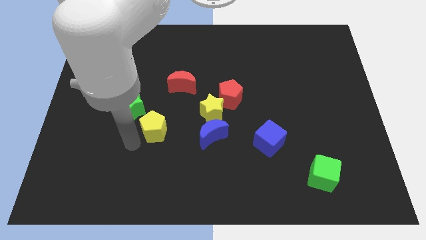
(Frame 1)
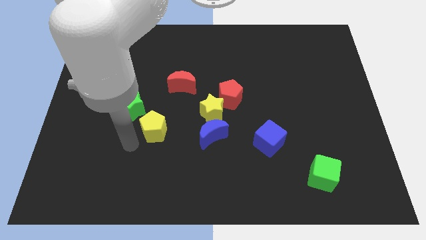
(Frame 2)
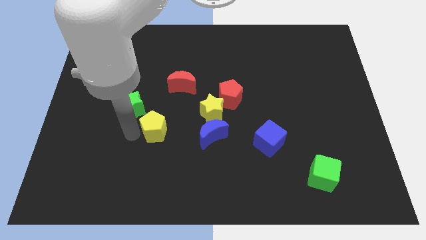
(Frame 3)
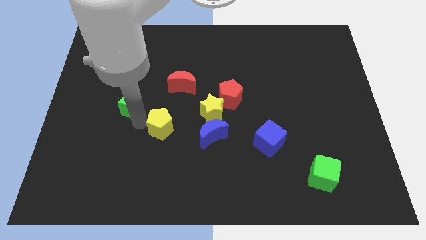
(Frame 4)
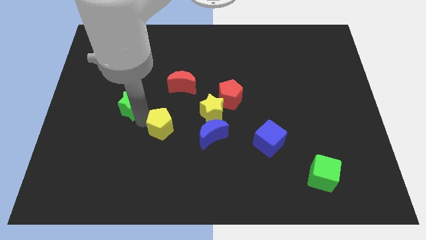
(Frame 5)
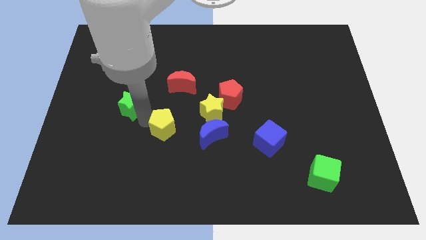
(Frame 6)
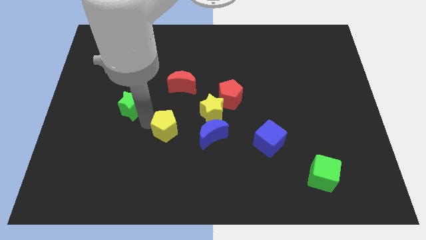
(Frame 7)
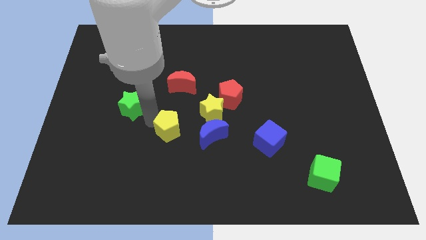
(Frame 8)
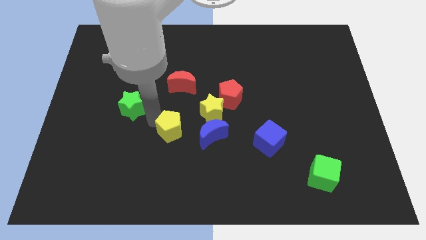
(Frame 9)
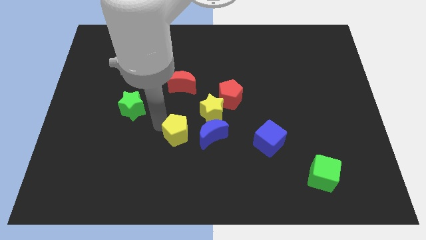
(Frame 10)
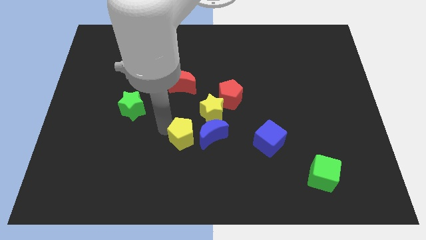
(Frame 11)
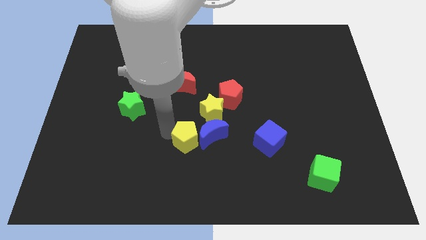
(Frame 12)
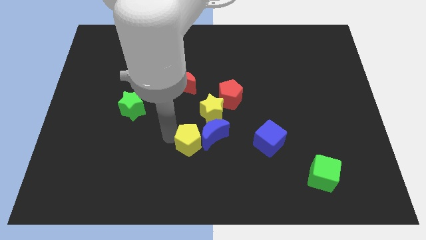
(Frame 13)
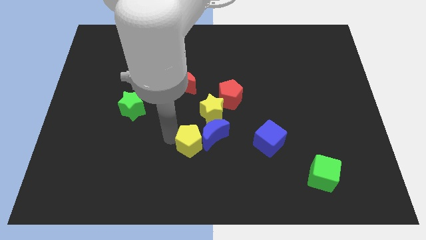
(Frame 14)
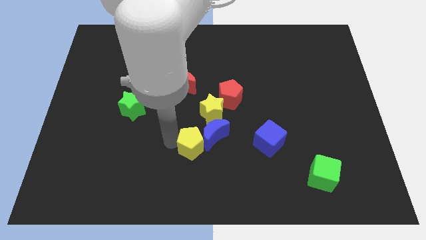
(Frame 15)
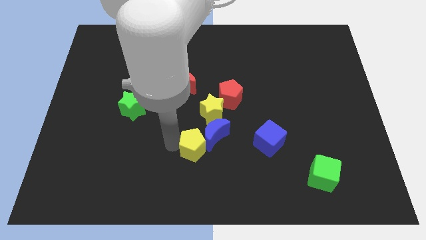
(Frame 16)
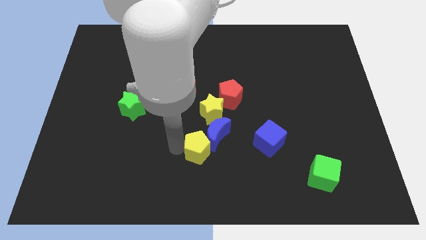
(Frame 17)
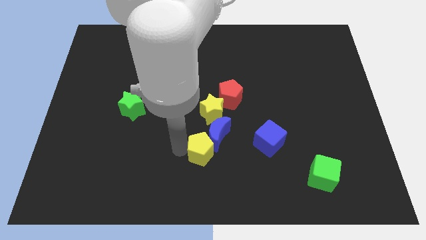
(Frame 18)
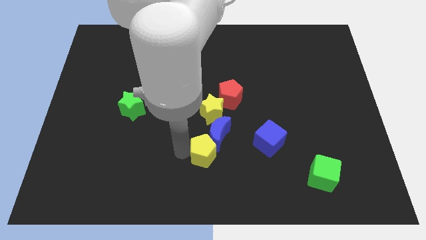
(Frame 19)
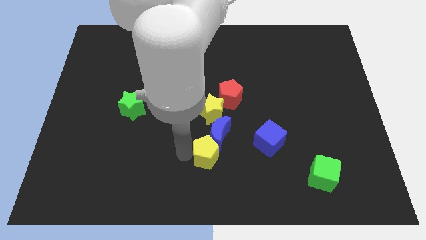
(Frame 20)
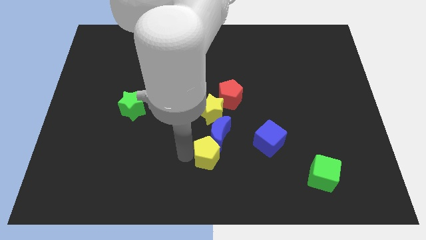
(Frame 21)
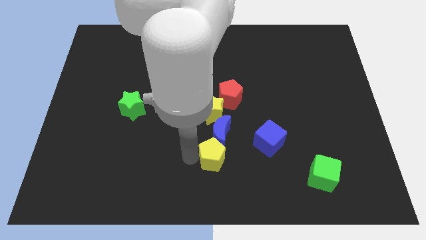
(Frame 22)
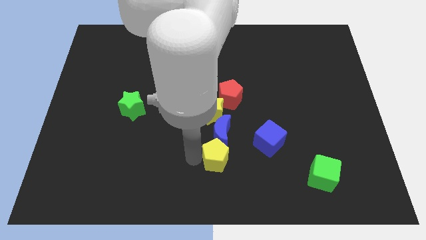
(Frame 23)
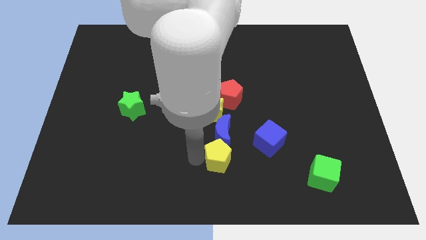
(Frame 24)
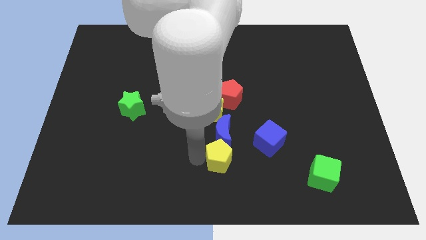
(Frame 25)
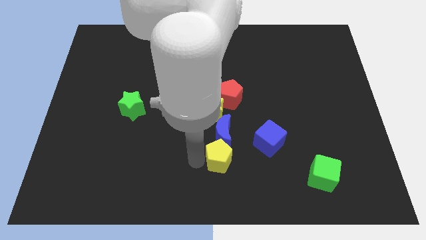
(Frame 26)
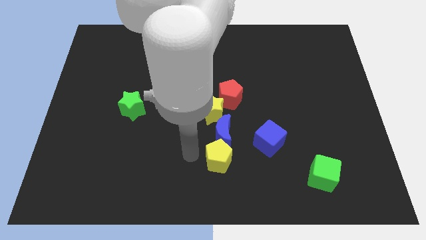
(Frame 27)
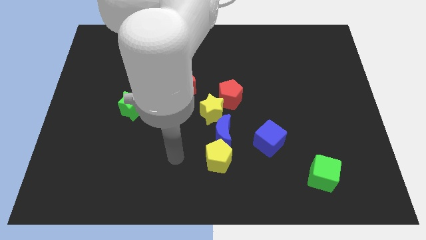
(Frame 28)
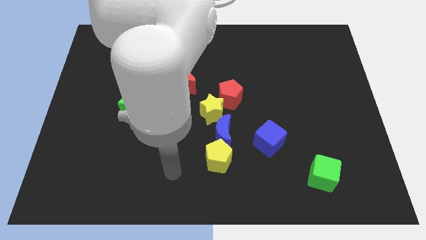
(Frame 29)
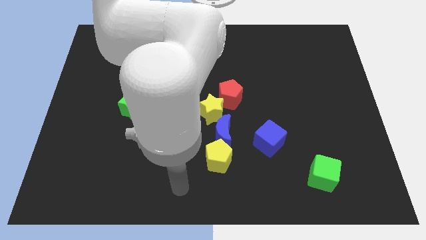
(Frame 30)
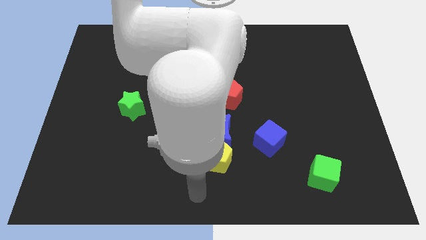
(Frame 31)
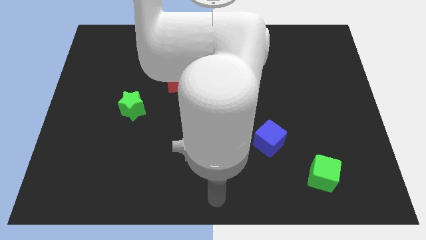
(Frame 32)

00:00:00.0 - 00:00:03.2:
slide yellow pentagon below blue moon

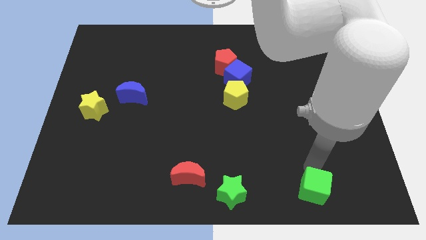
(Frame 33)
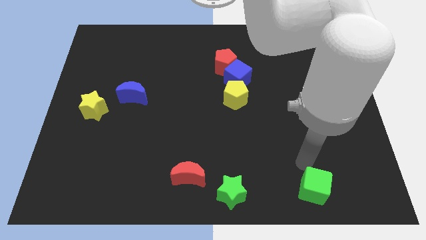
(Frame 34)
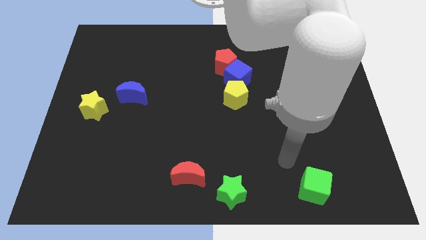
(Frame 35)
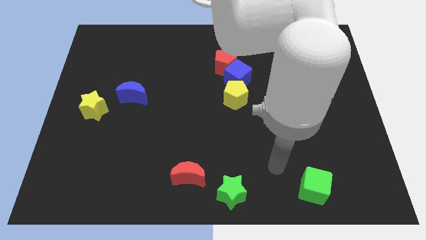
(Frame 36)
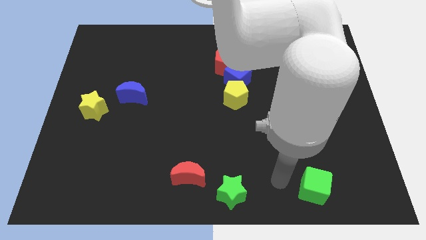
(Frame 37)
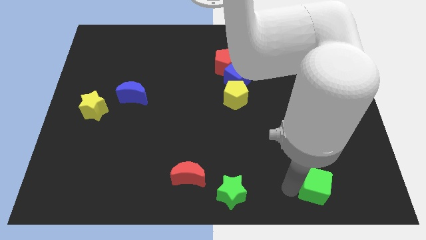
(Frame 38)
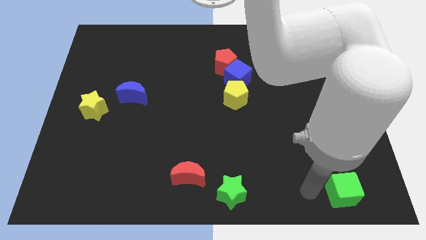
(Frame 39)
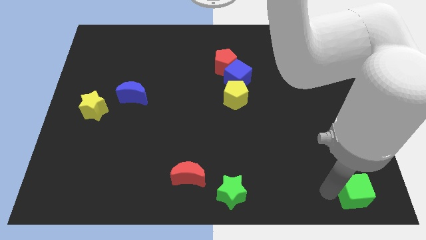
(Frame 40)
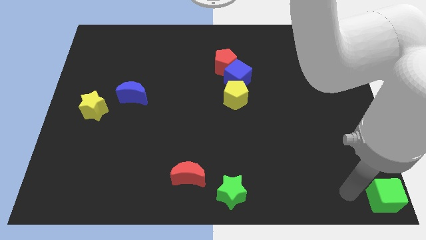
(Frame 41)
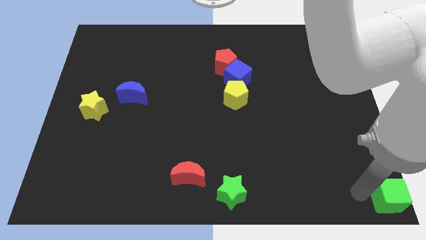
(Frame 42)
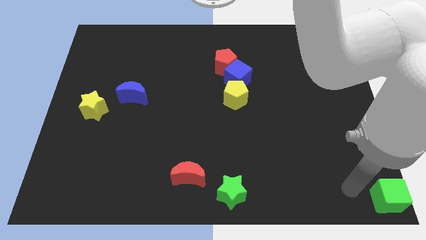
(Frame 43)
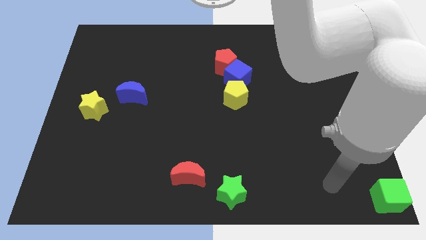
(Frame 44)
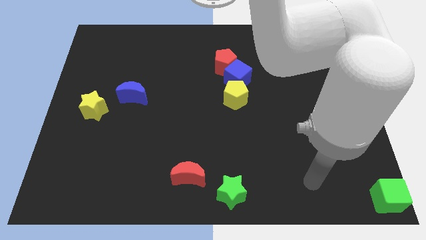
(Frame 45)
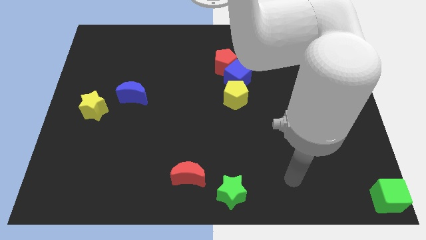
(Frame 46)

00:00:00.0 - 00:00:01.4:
move the green cube to the bottom right corner of the board

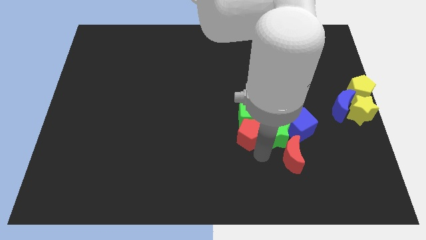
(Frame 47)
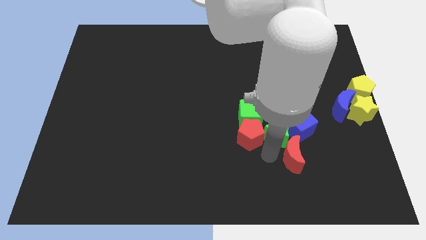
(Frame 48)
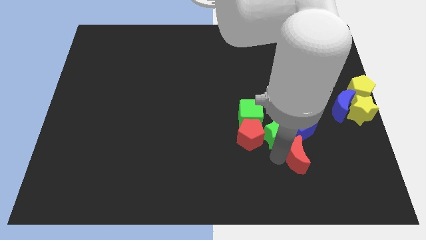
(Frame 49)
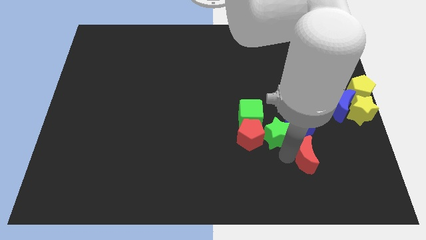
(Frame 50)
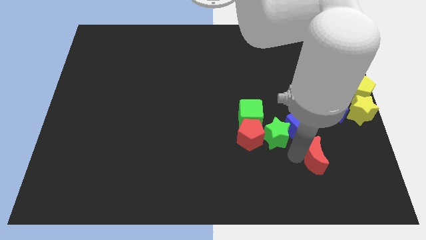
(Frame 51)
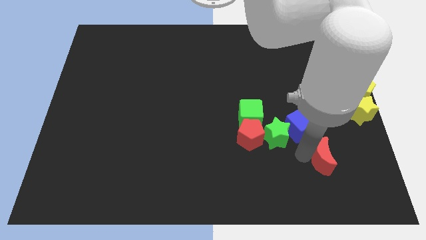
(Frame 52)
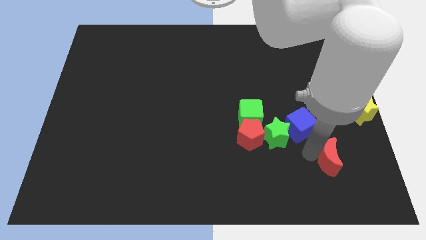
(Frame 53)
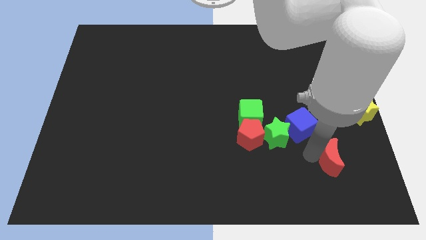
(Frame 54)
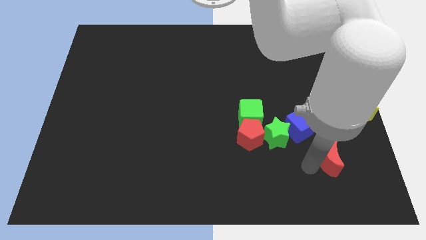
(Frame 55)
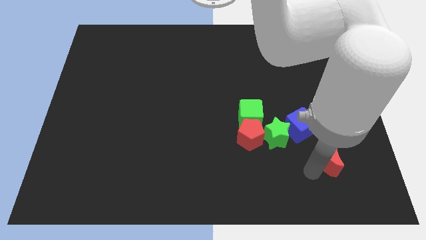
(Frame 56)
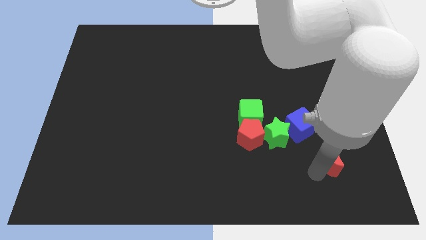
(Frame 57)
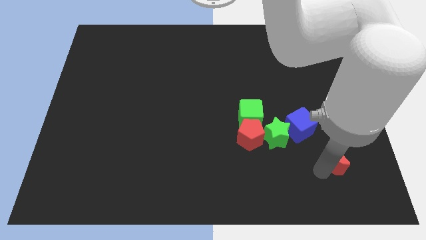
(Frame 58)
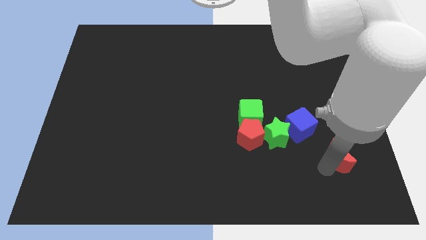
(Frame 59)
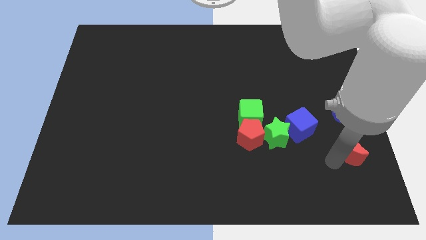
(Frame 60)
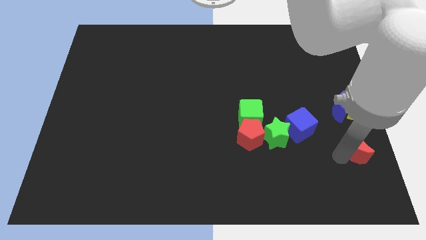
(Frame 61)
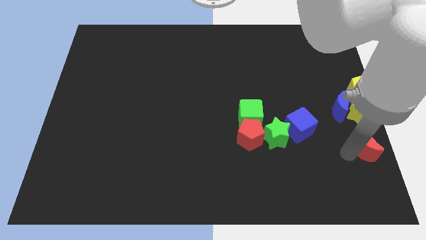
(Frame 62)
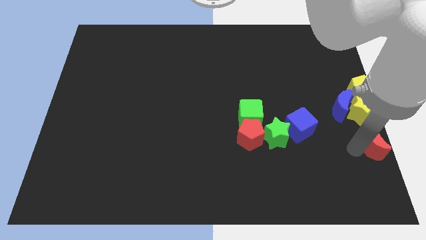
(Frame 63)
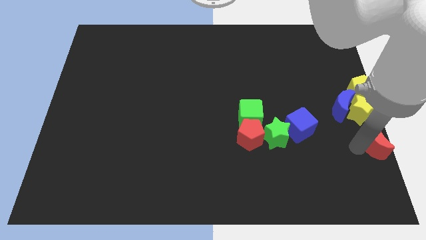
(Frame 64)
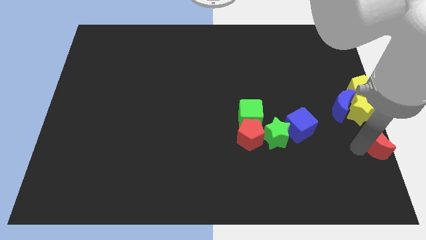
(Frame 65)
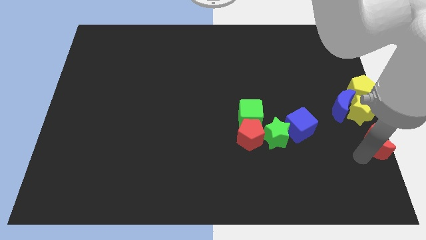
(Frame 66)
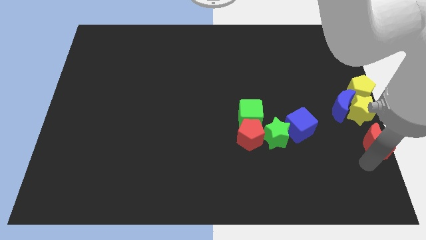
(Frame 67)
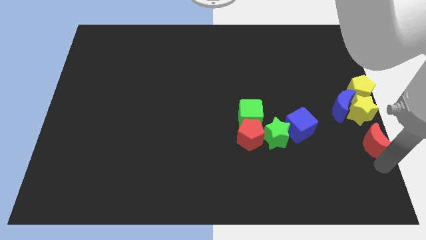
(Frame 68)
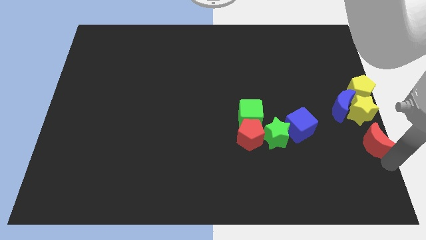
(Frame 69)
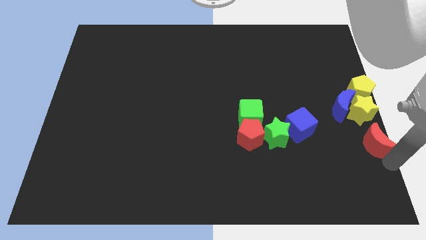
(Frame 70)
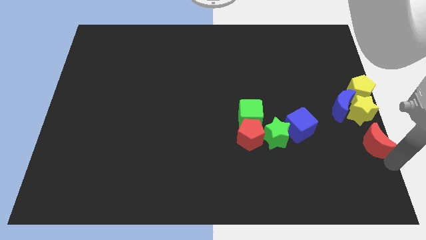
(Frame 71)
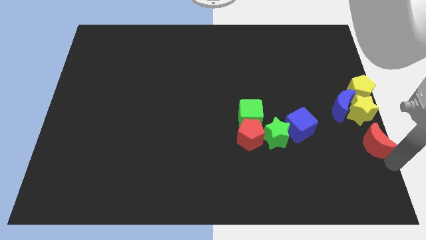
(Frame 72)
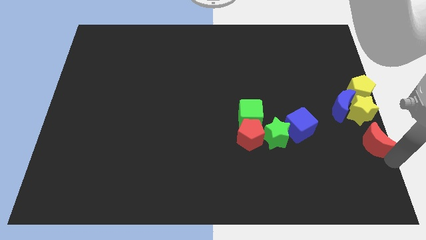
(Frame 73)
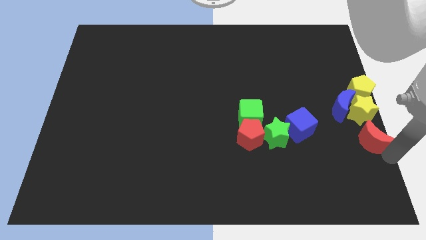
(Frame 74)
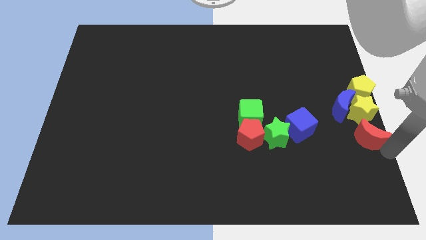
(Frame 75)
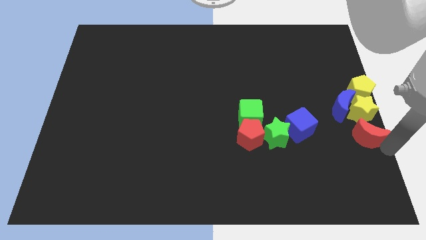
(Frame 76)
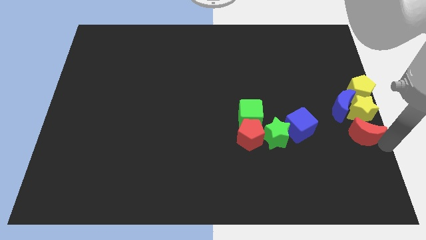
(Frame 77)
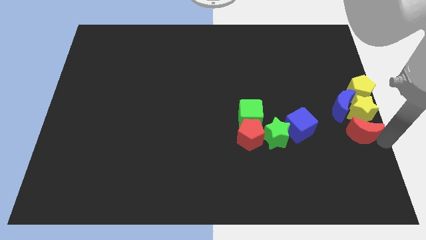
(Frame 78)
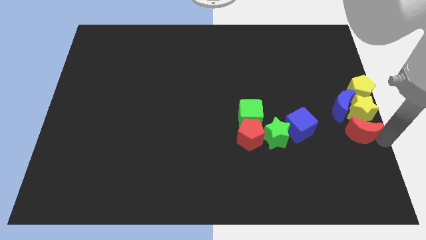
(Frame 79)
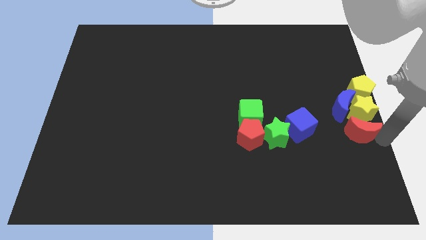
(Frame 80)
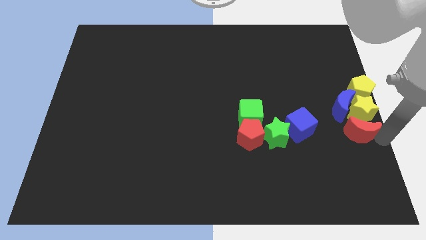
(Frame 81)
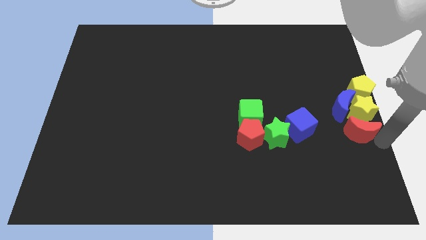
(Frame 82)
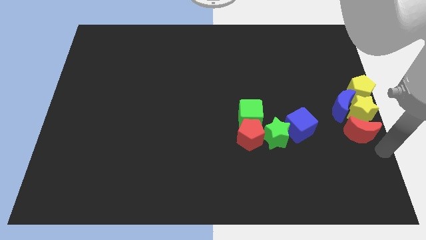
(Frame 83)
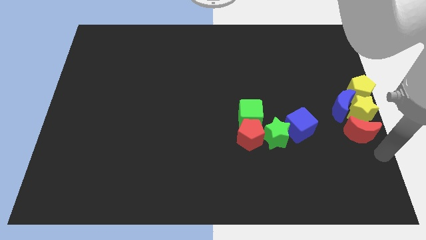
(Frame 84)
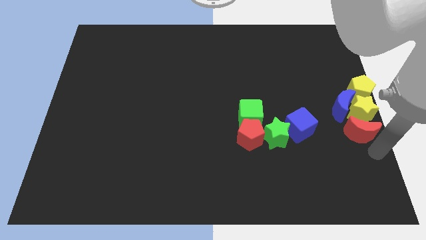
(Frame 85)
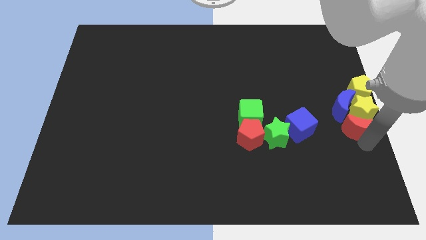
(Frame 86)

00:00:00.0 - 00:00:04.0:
push the red crescent close to the bottom side of the yellow star

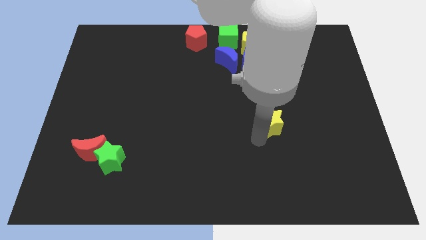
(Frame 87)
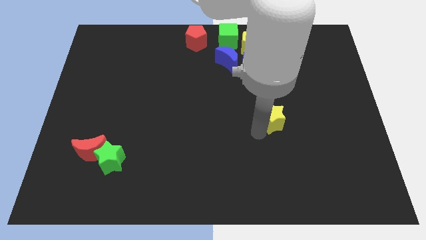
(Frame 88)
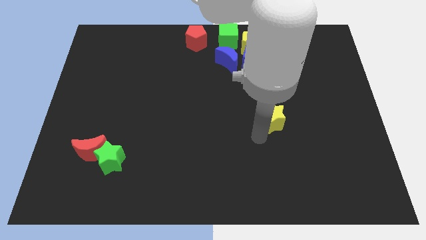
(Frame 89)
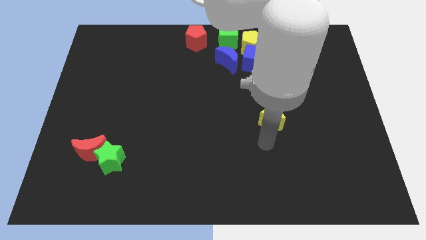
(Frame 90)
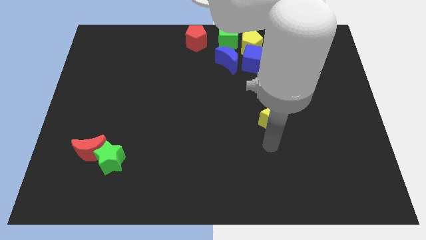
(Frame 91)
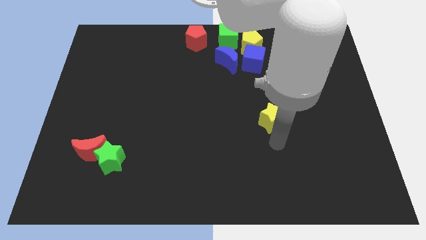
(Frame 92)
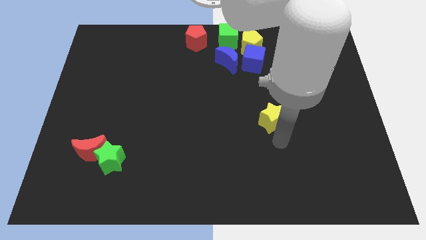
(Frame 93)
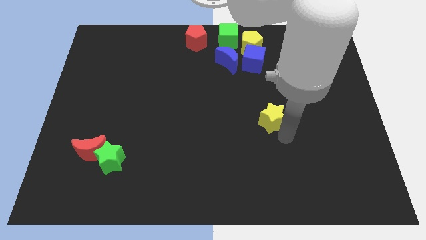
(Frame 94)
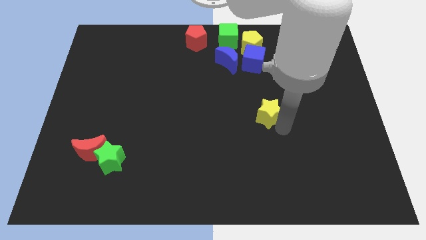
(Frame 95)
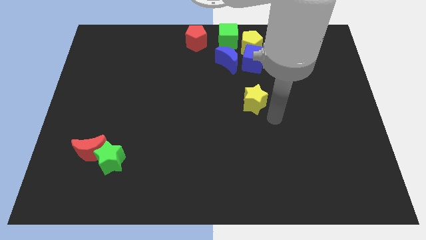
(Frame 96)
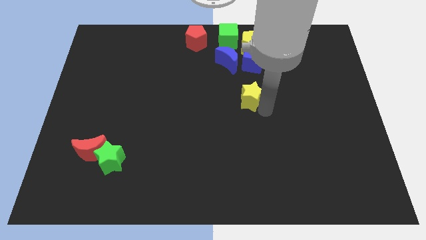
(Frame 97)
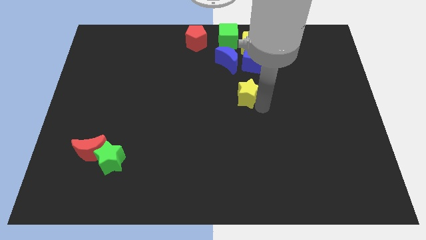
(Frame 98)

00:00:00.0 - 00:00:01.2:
slightly push the yellow star to the center
